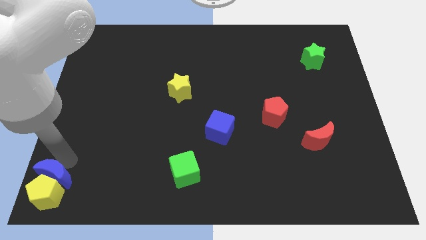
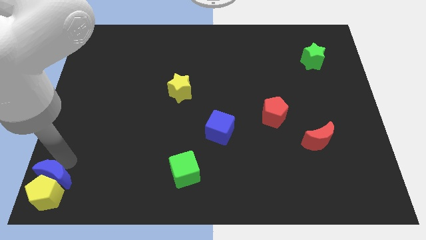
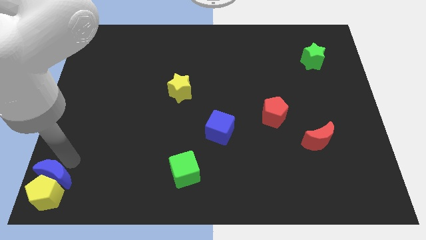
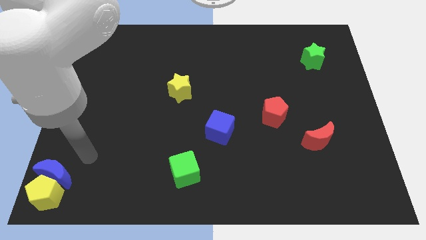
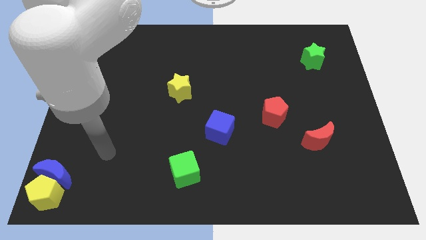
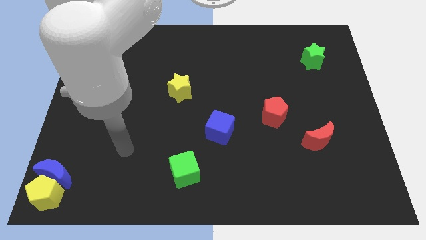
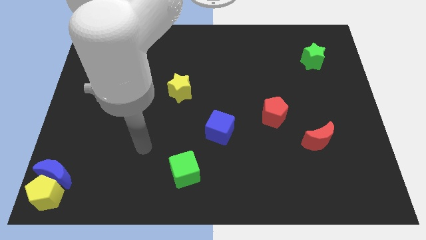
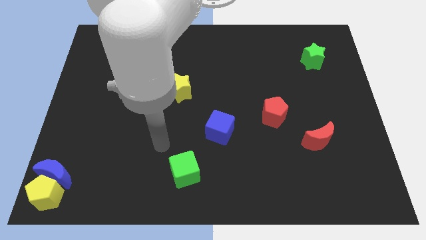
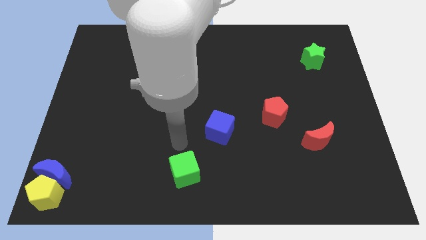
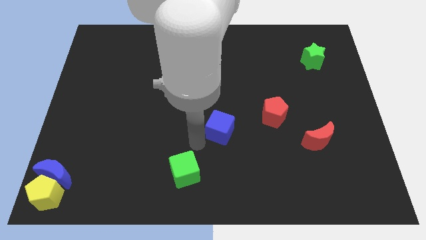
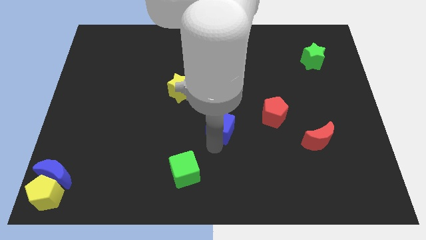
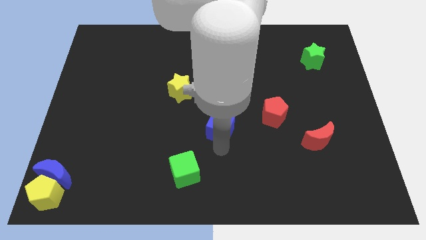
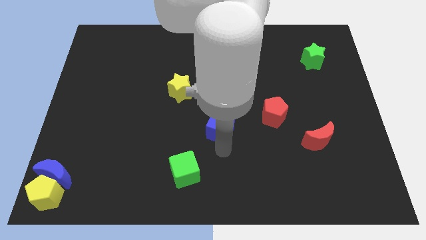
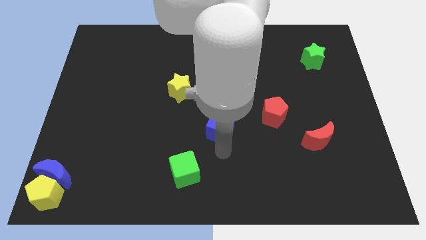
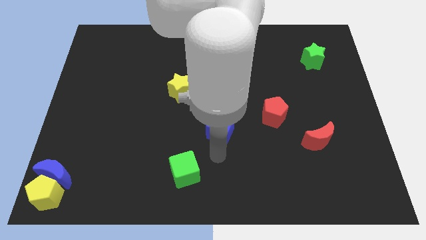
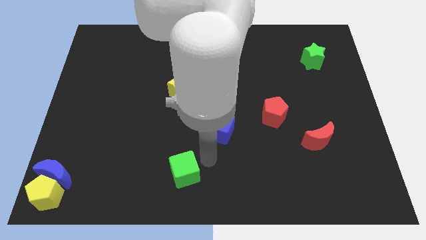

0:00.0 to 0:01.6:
place your arm to the bottom of blue cube

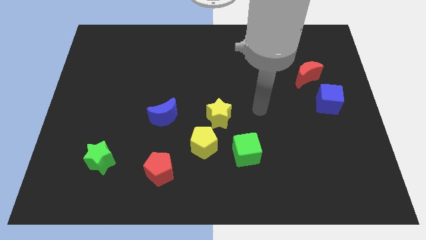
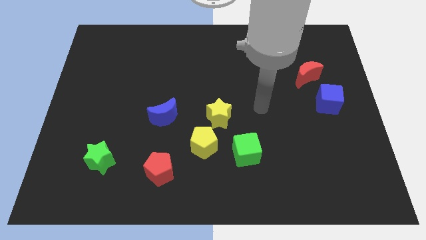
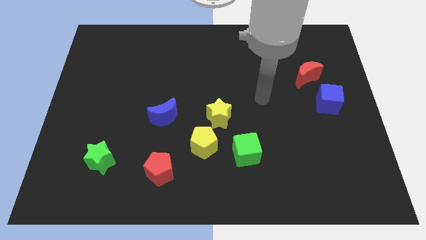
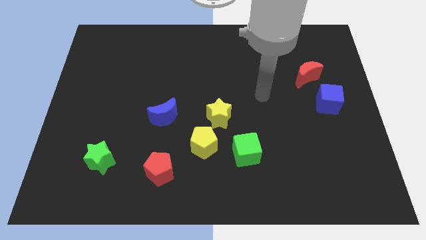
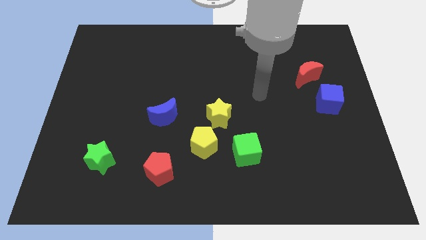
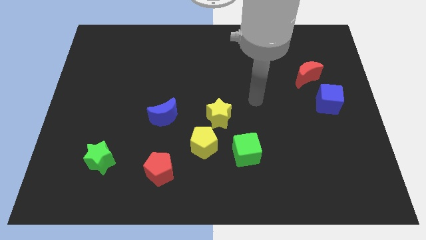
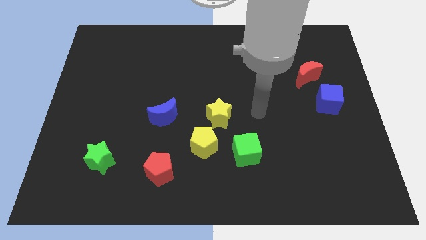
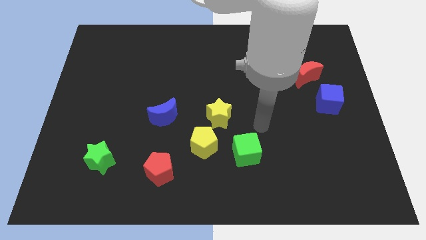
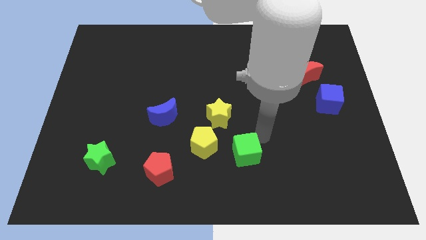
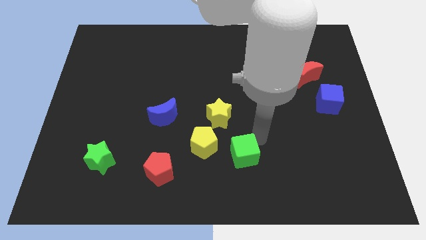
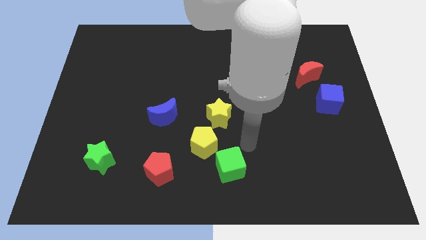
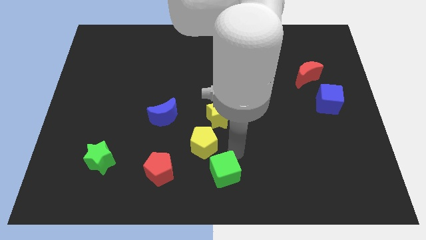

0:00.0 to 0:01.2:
push the green cube to the bottom of the board

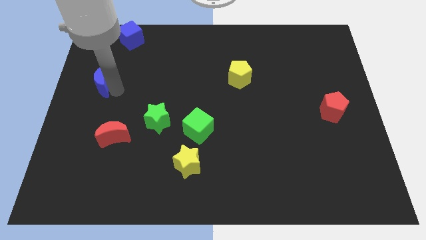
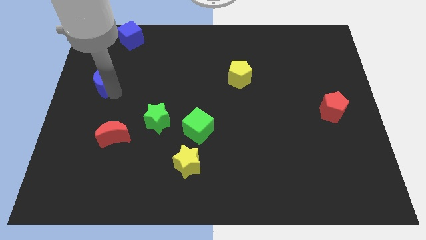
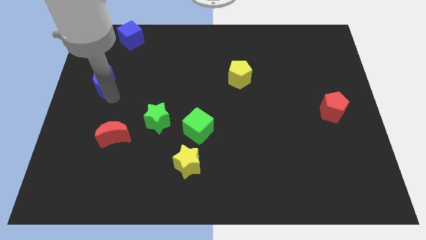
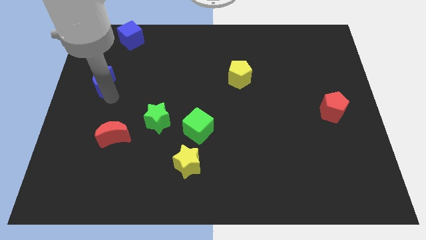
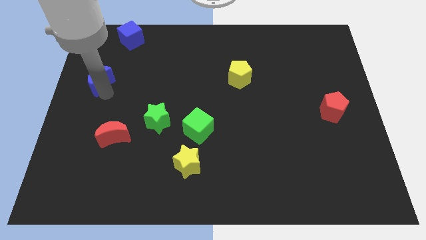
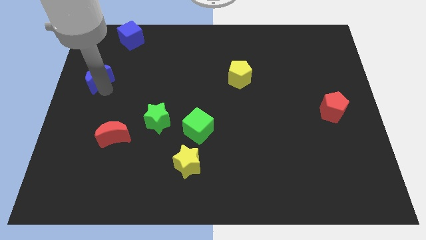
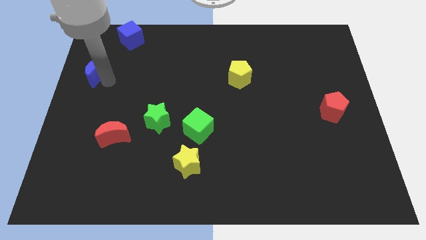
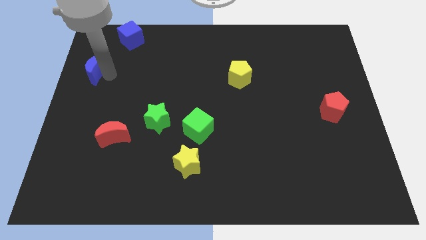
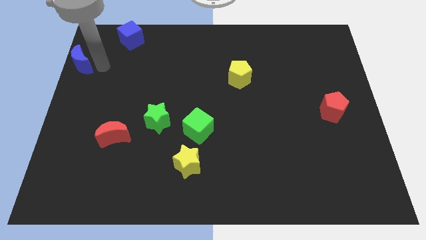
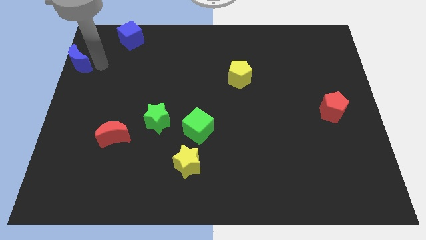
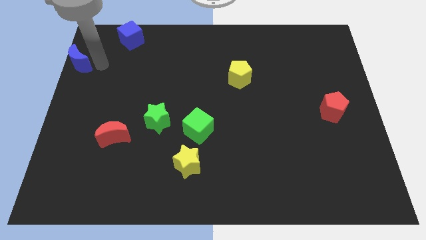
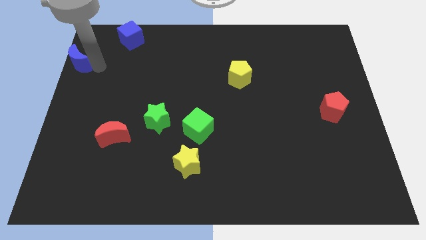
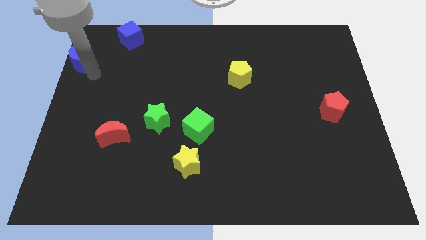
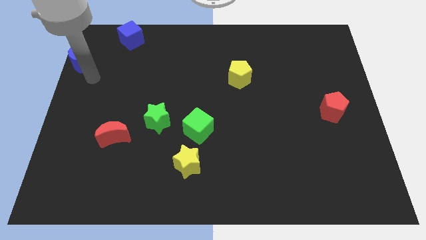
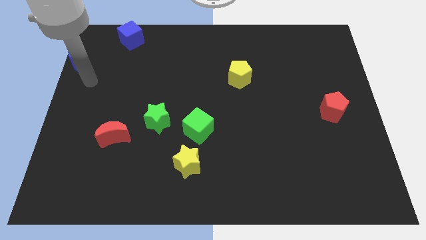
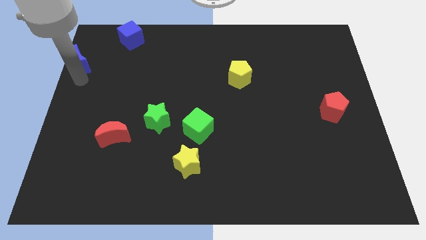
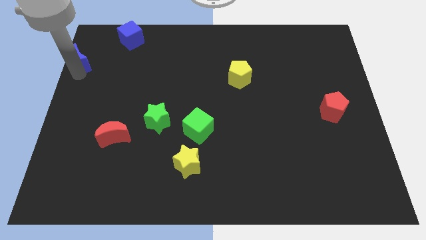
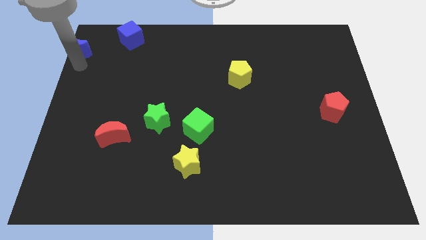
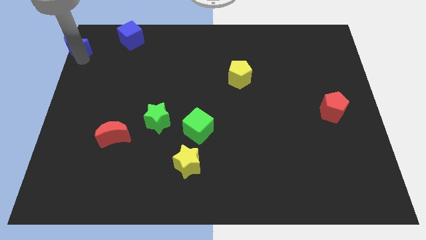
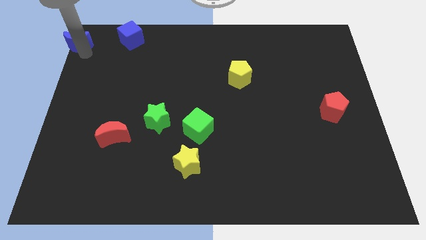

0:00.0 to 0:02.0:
slide the blue moon to the top left corner of the board

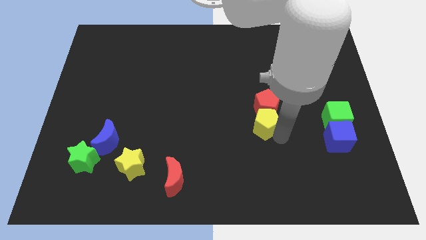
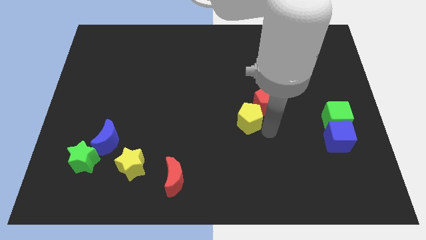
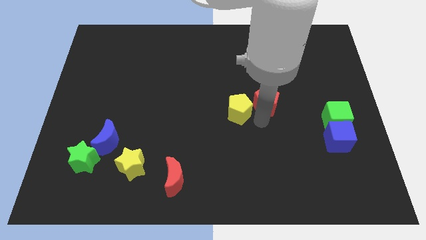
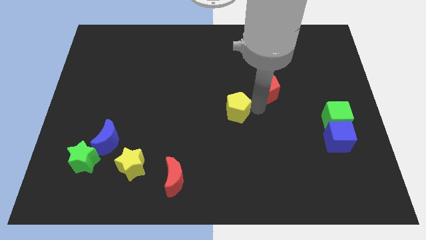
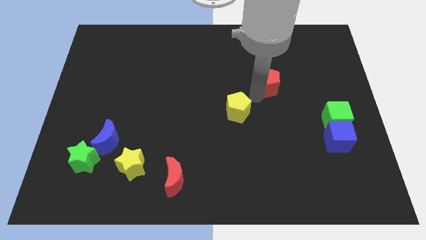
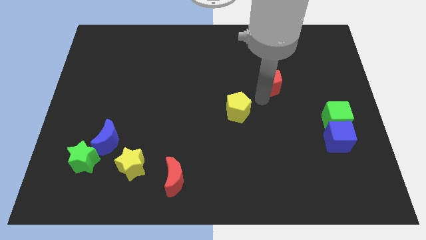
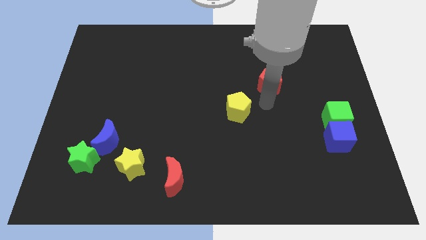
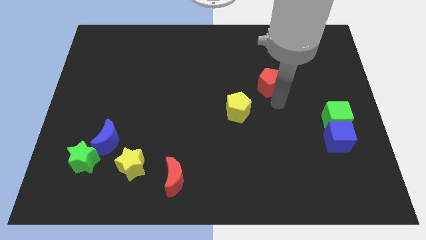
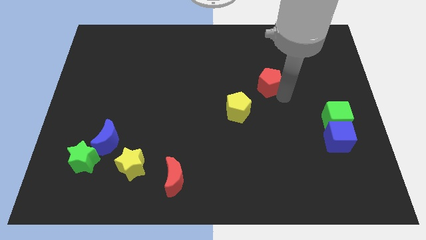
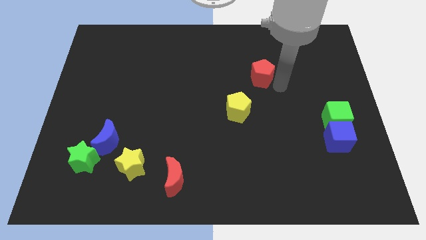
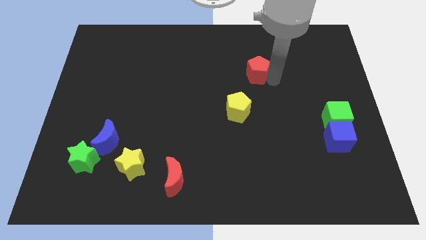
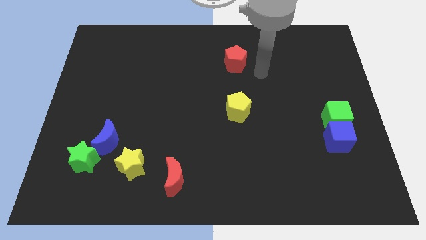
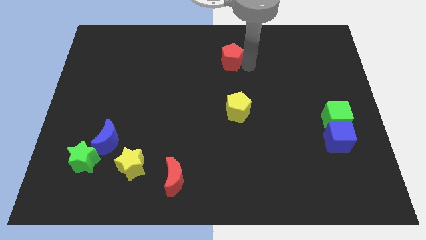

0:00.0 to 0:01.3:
slide the red pentagon vertically to the top of the yellow pentagon

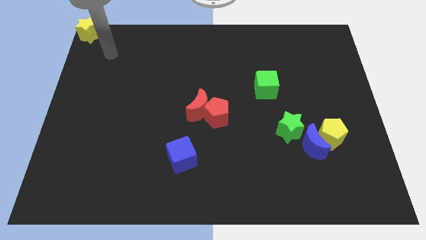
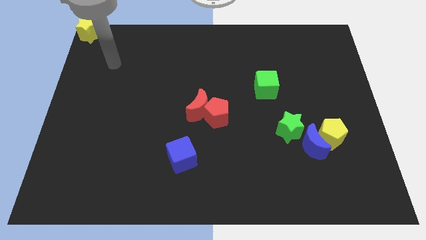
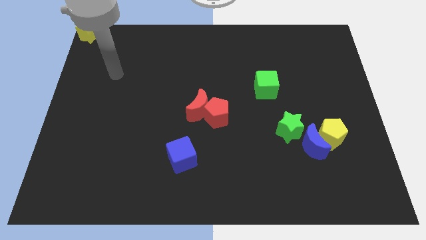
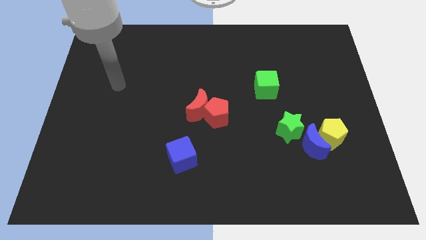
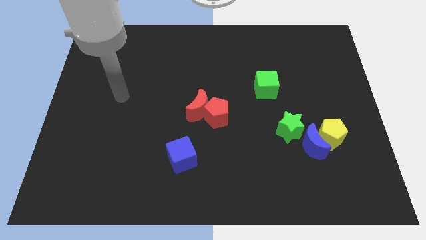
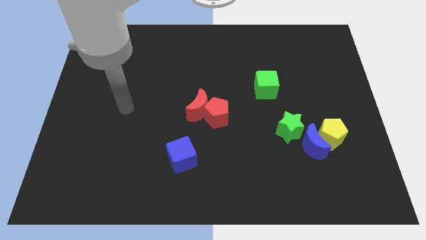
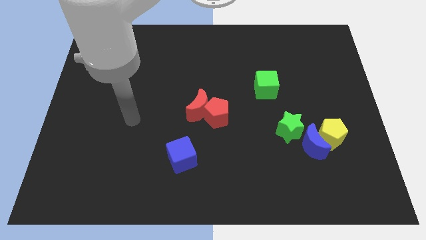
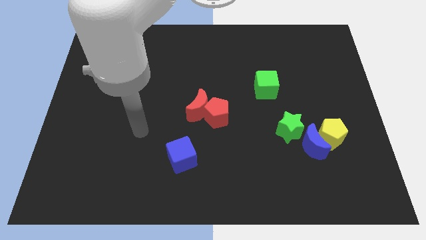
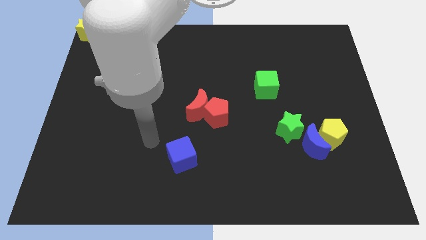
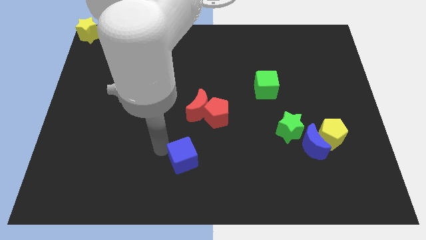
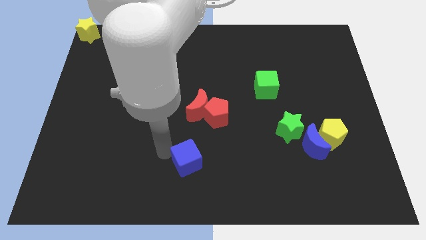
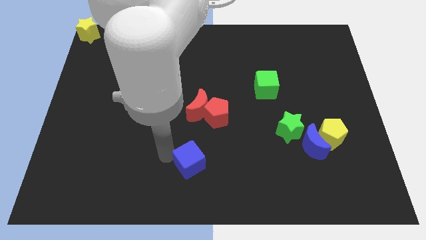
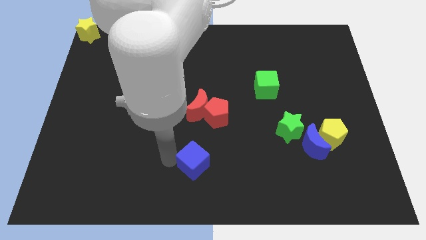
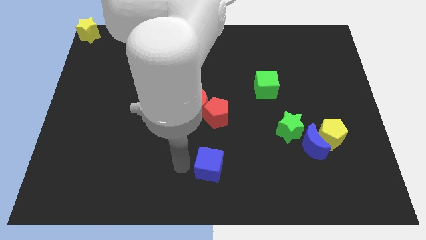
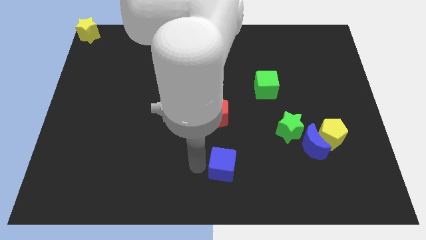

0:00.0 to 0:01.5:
push the blue cube to the bottom center of the board

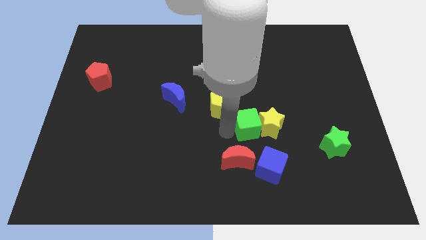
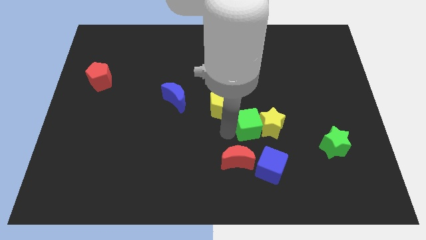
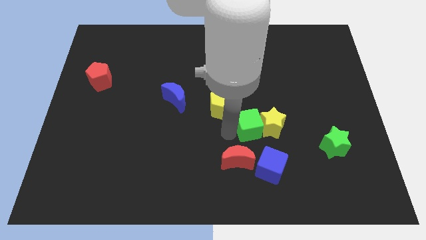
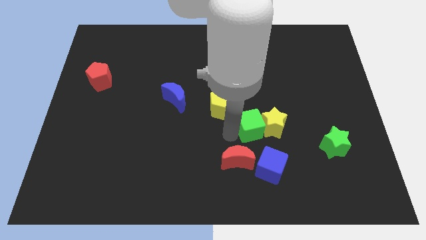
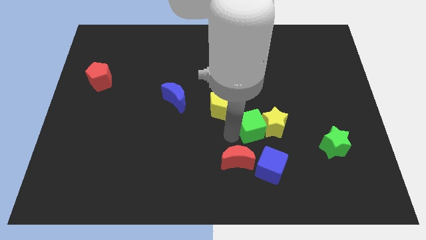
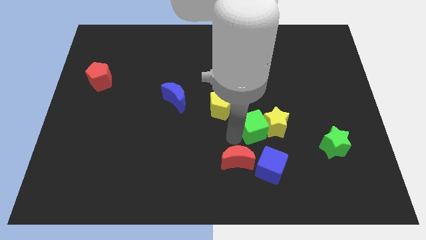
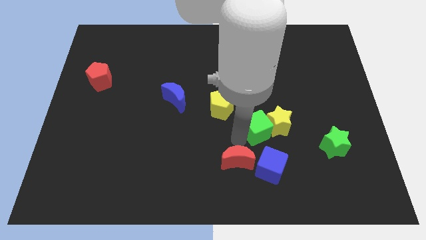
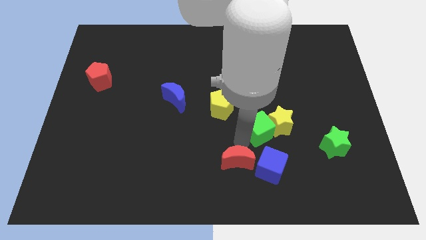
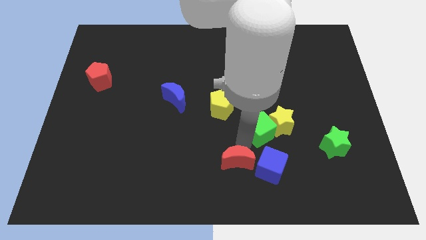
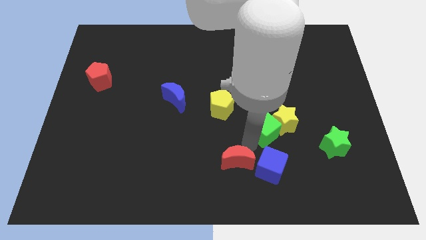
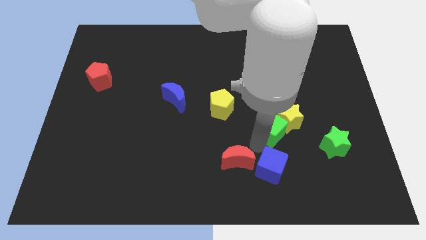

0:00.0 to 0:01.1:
push the green cube diagonally to the bottom left of the yellow star
